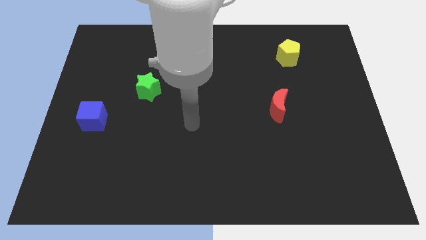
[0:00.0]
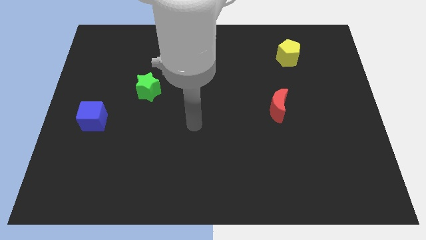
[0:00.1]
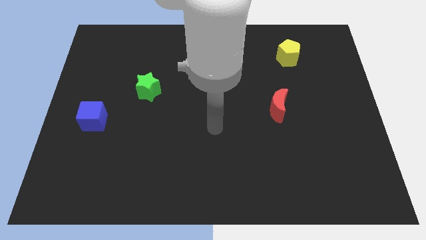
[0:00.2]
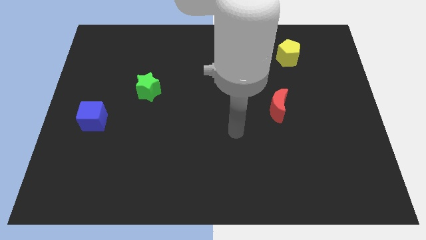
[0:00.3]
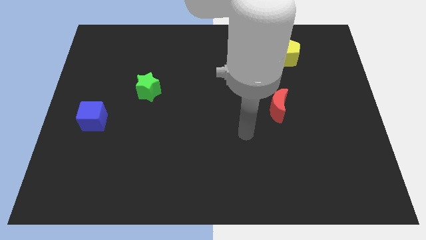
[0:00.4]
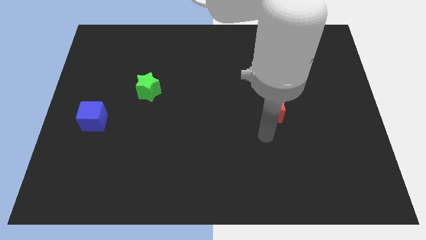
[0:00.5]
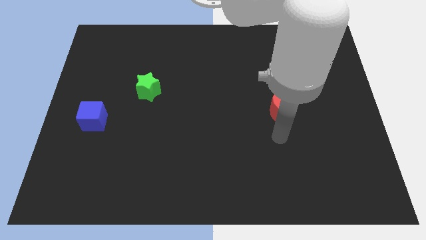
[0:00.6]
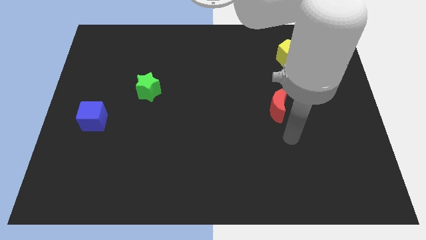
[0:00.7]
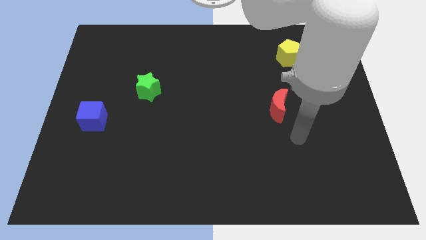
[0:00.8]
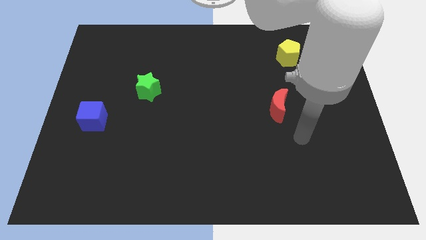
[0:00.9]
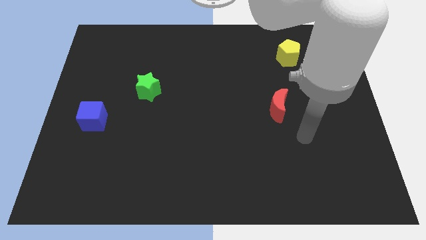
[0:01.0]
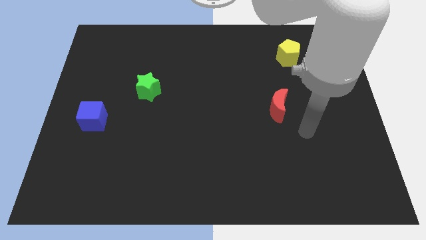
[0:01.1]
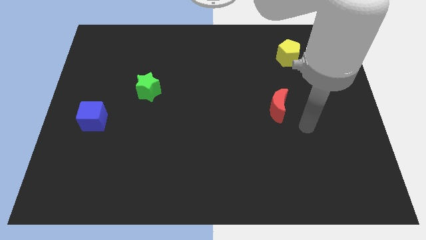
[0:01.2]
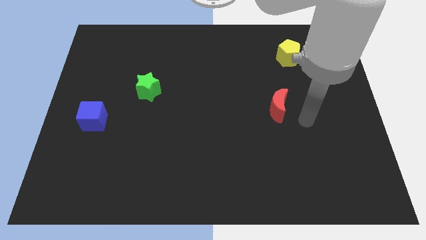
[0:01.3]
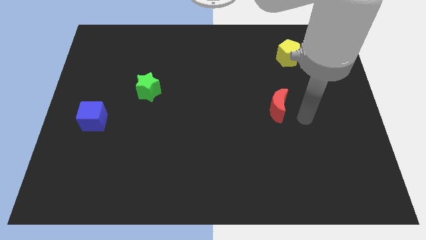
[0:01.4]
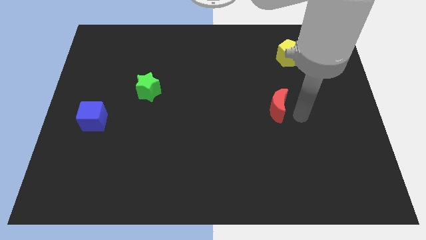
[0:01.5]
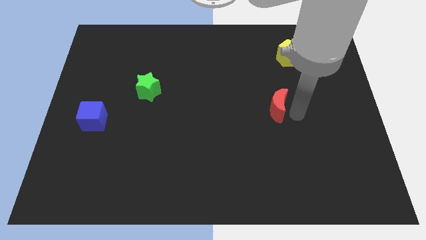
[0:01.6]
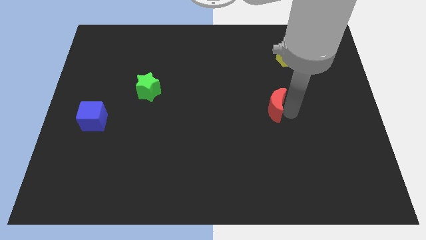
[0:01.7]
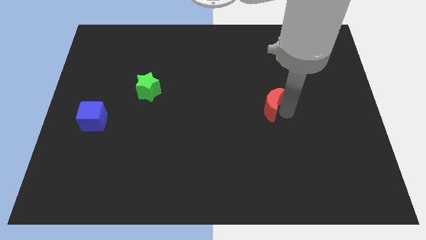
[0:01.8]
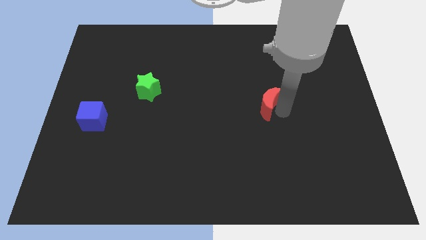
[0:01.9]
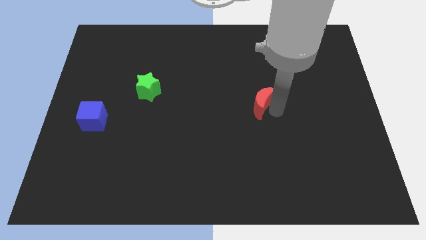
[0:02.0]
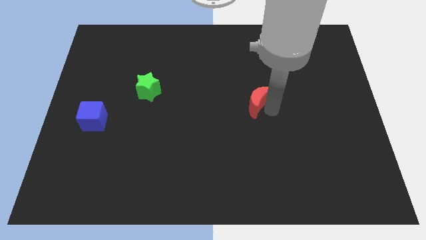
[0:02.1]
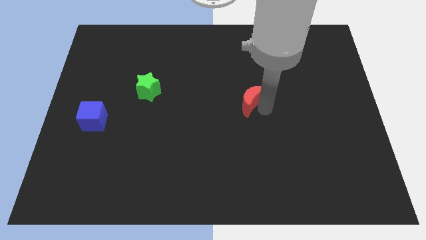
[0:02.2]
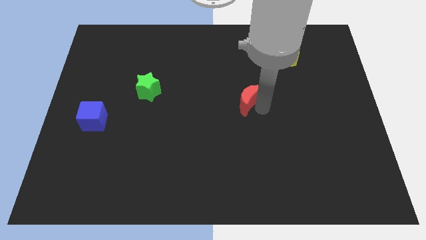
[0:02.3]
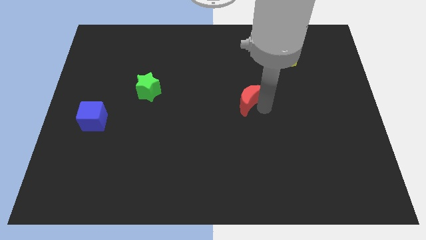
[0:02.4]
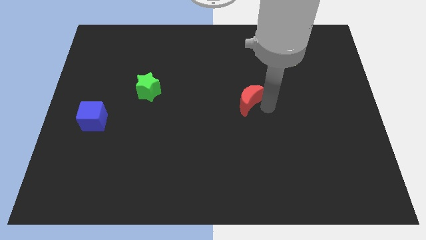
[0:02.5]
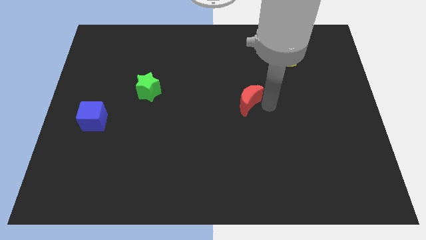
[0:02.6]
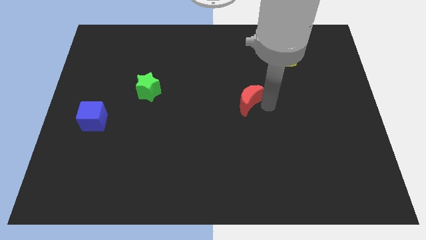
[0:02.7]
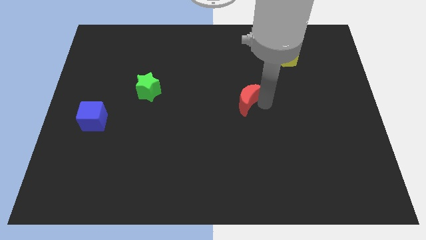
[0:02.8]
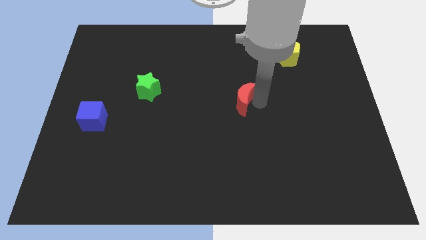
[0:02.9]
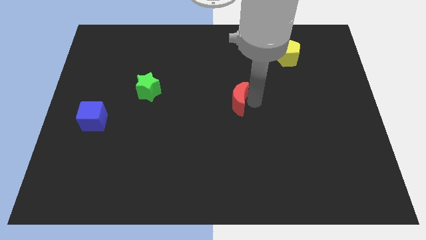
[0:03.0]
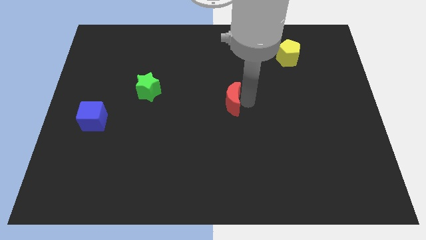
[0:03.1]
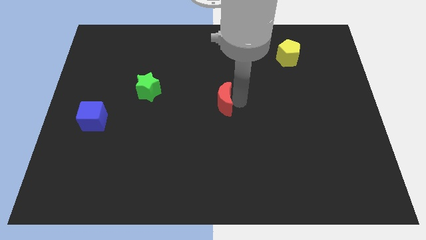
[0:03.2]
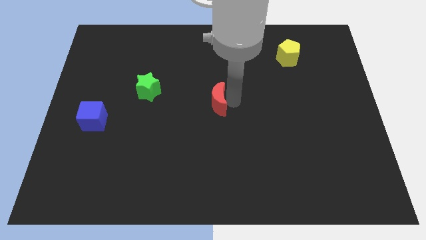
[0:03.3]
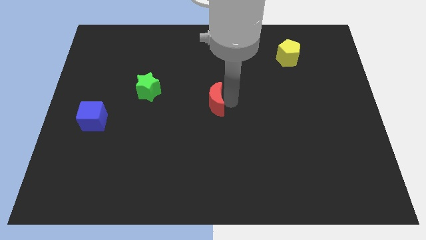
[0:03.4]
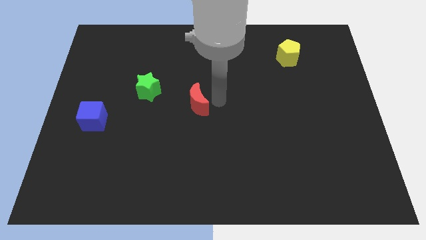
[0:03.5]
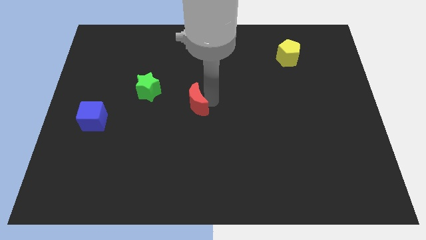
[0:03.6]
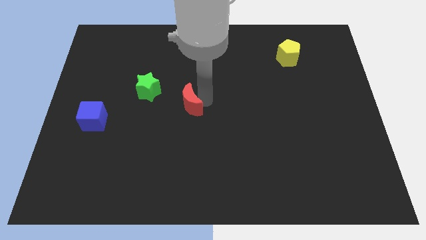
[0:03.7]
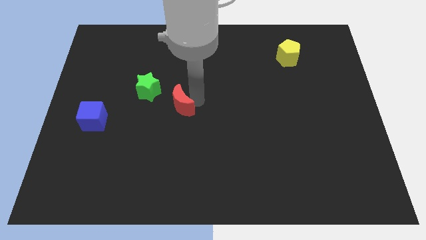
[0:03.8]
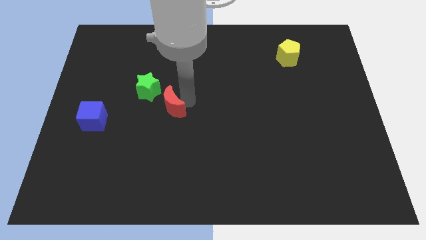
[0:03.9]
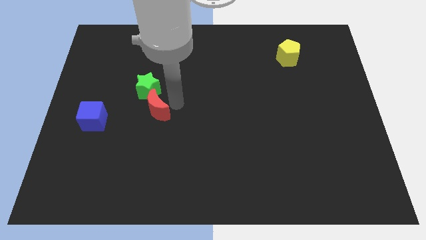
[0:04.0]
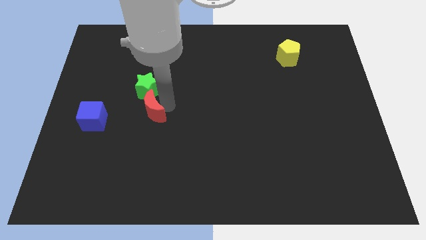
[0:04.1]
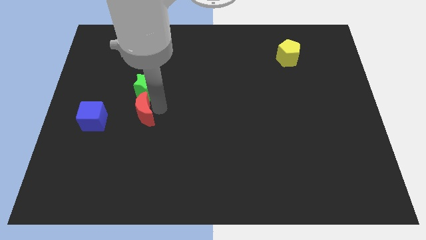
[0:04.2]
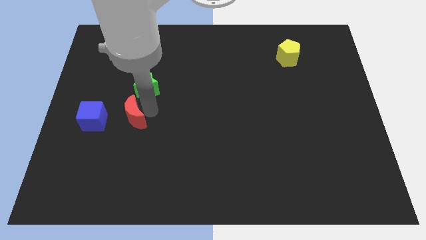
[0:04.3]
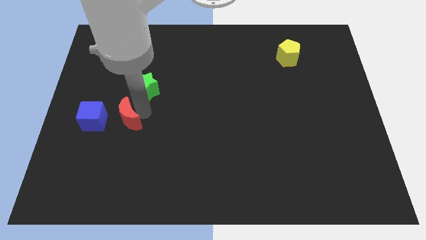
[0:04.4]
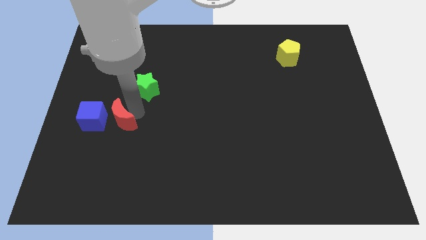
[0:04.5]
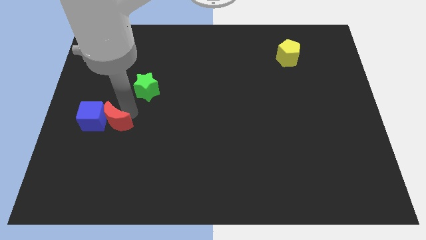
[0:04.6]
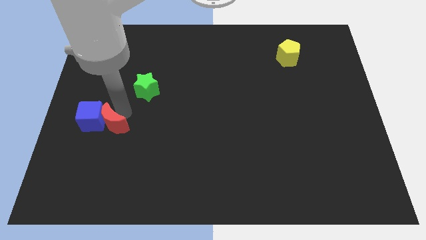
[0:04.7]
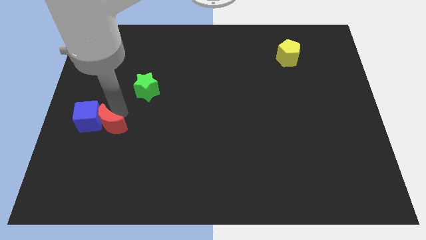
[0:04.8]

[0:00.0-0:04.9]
put the red block close to the blue block

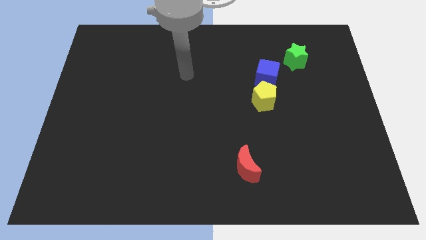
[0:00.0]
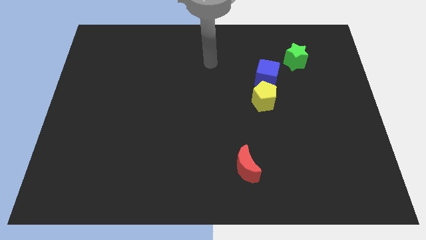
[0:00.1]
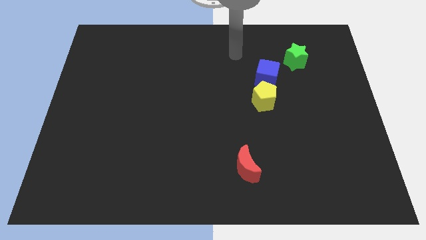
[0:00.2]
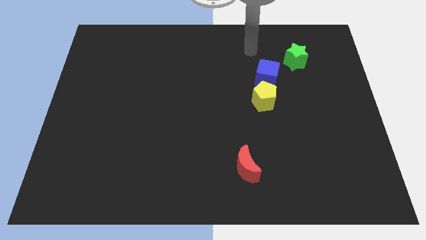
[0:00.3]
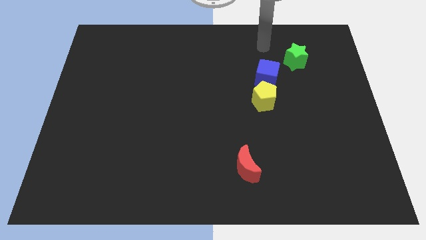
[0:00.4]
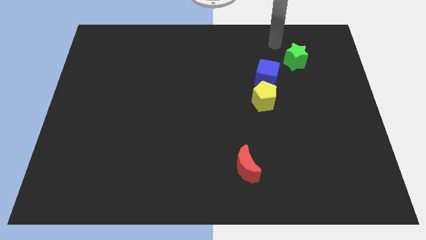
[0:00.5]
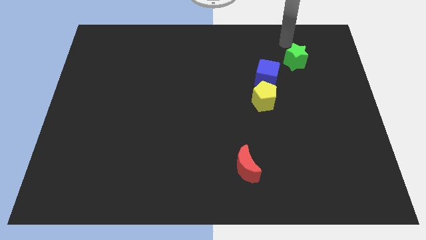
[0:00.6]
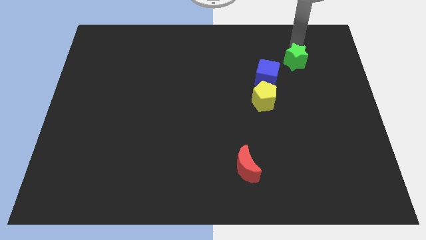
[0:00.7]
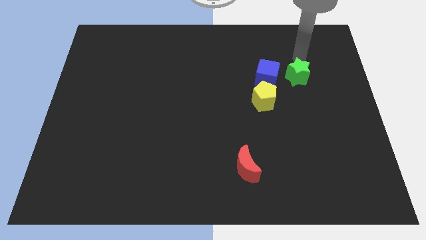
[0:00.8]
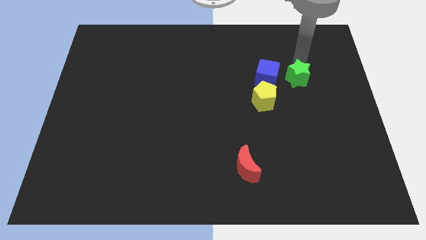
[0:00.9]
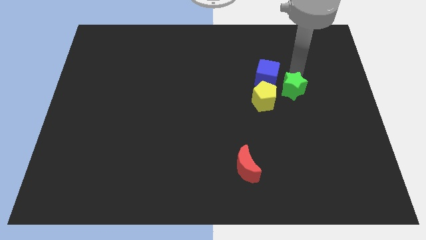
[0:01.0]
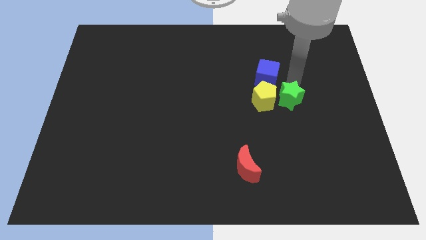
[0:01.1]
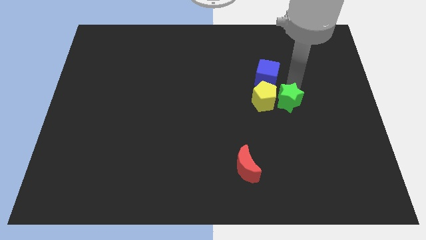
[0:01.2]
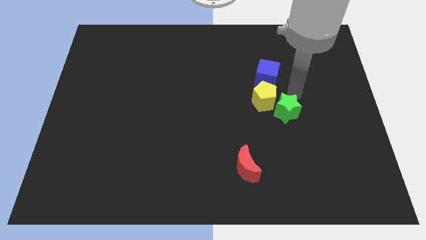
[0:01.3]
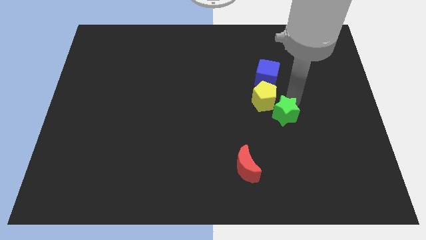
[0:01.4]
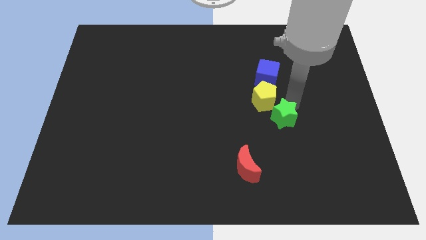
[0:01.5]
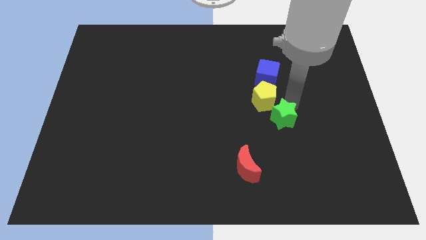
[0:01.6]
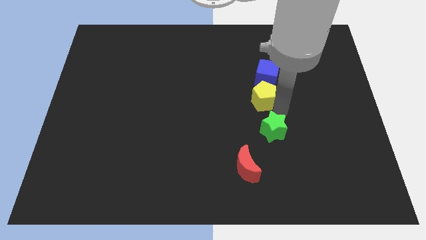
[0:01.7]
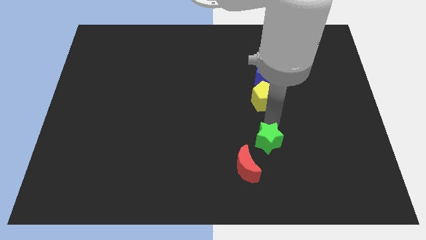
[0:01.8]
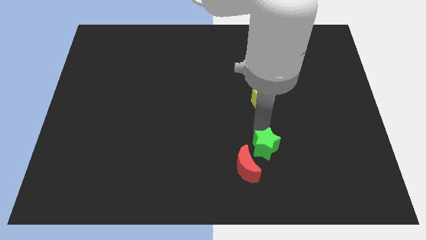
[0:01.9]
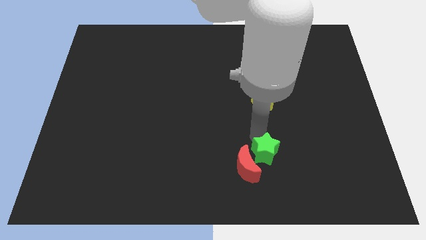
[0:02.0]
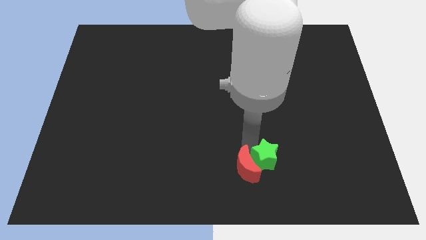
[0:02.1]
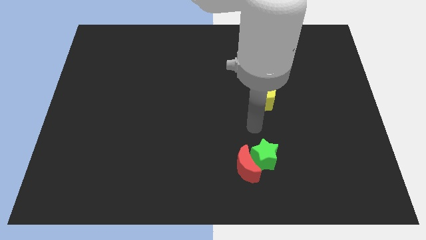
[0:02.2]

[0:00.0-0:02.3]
push the green block close to the red block

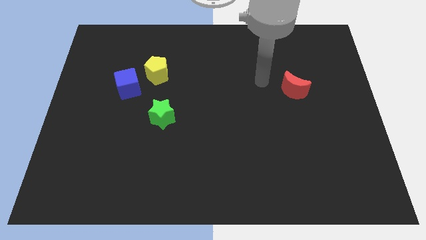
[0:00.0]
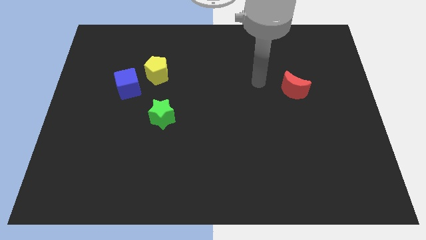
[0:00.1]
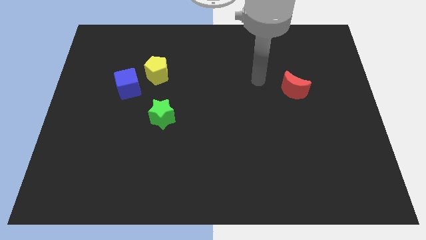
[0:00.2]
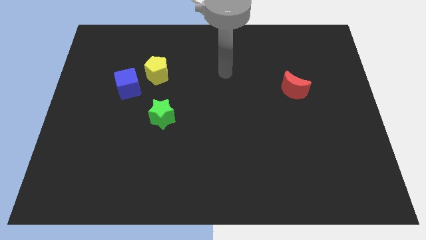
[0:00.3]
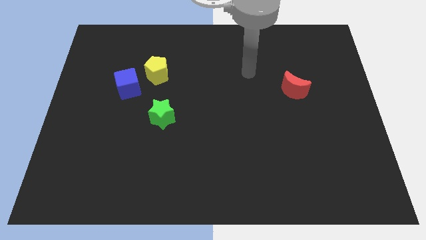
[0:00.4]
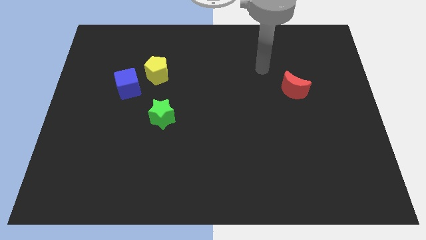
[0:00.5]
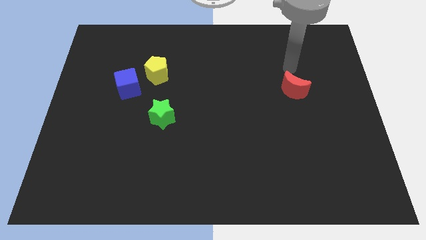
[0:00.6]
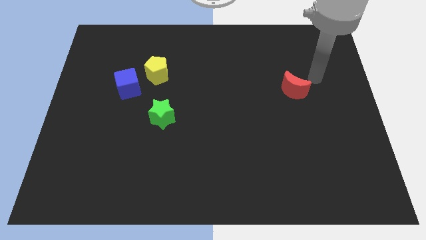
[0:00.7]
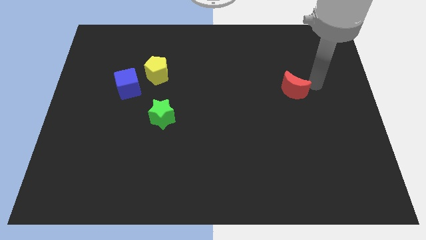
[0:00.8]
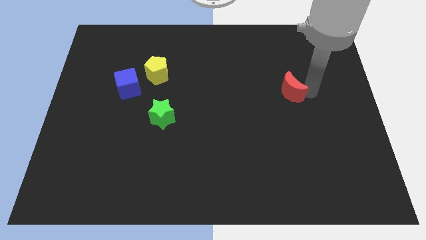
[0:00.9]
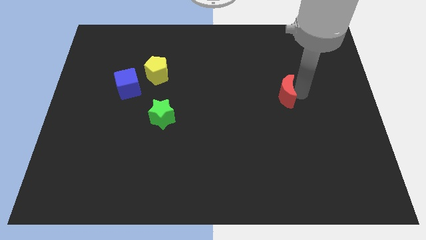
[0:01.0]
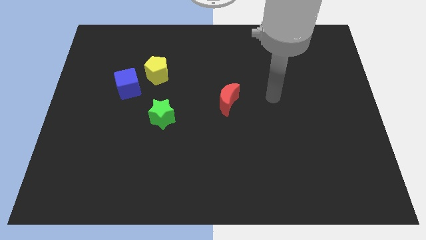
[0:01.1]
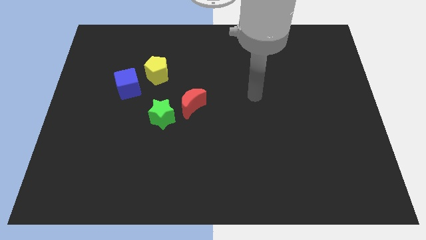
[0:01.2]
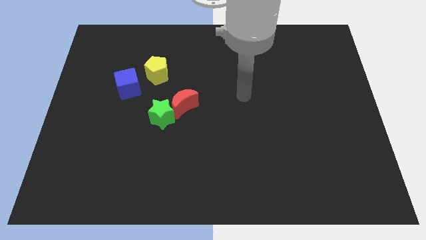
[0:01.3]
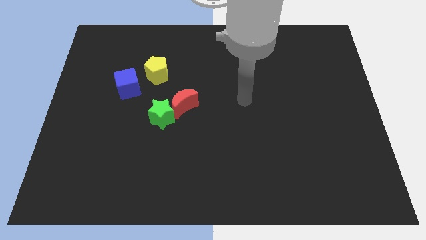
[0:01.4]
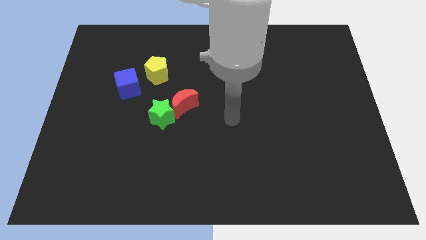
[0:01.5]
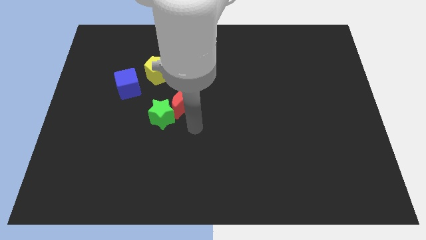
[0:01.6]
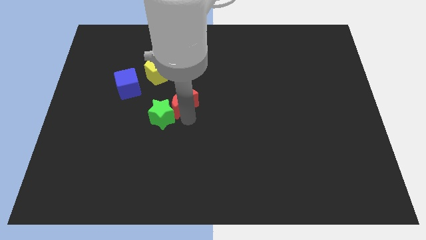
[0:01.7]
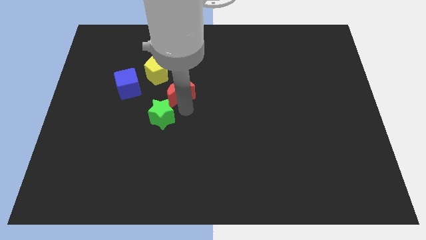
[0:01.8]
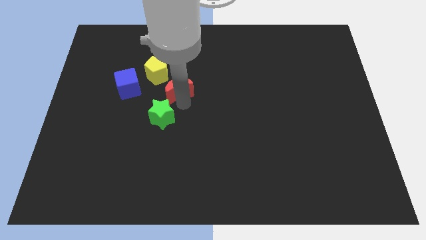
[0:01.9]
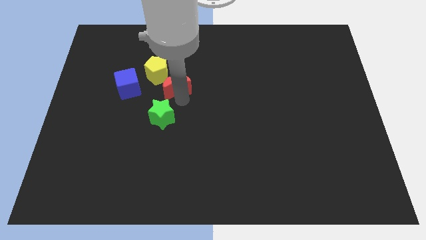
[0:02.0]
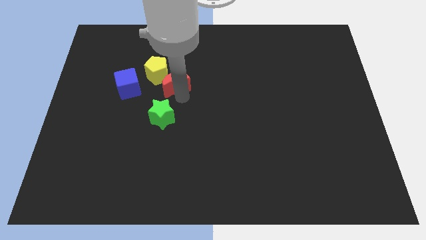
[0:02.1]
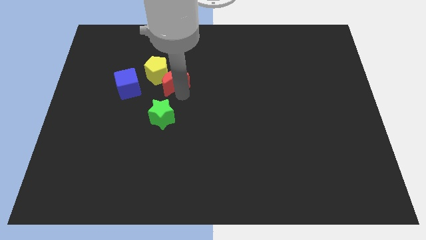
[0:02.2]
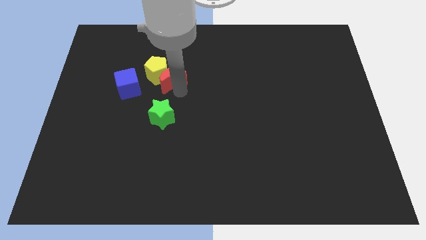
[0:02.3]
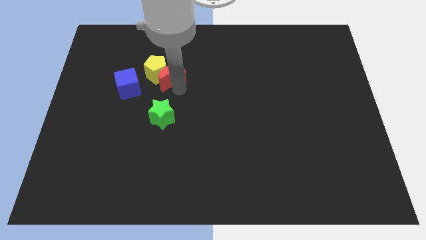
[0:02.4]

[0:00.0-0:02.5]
push the red block next to the pentagon
